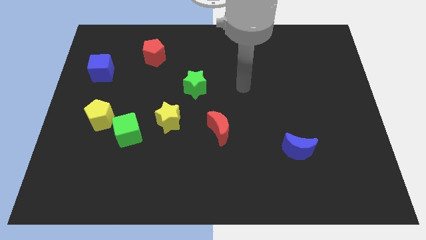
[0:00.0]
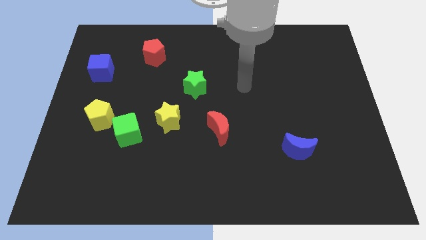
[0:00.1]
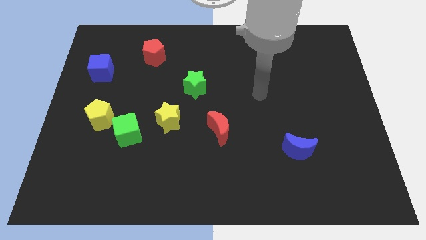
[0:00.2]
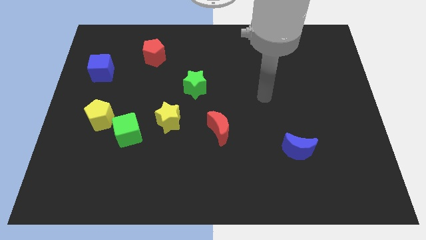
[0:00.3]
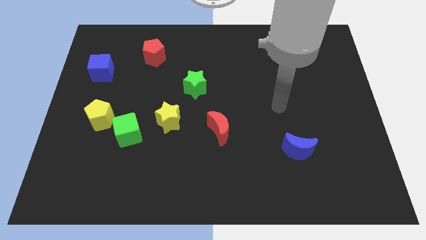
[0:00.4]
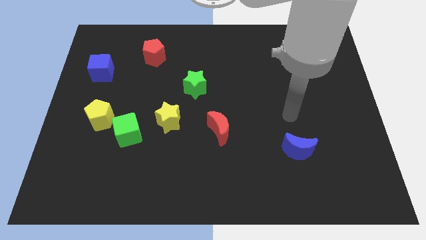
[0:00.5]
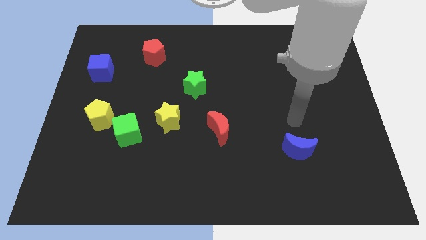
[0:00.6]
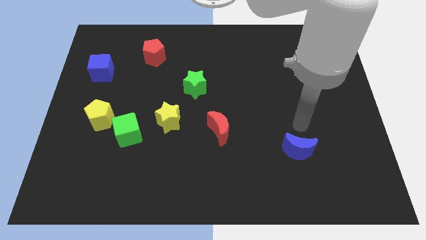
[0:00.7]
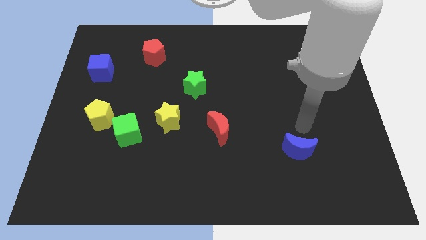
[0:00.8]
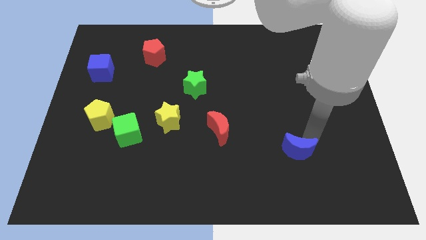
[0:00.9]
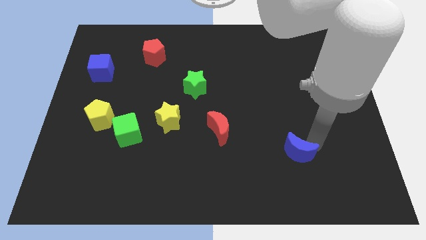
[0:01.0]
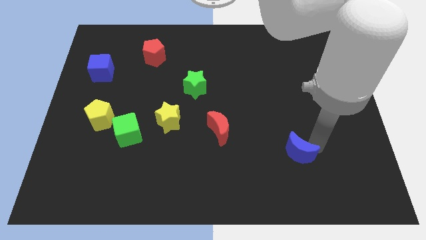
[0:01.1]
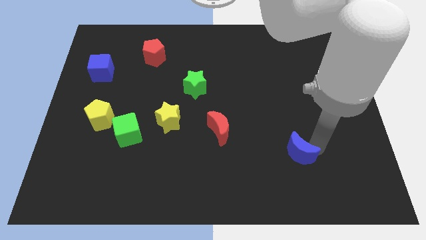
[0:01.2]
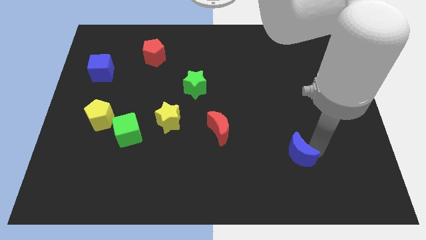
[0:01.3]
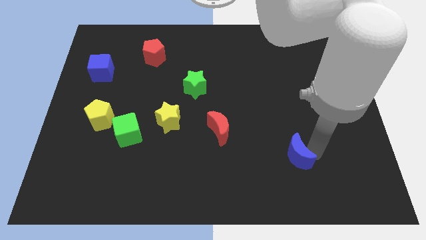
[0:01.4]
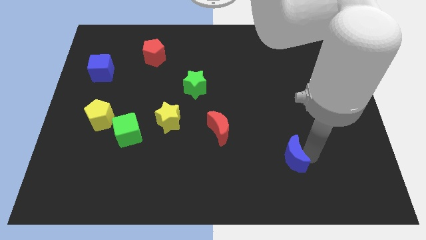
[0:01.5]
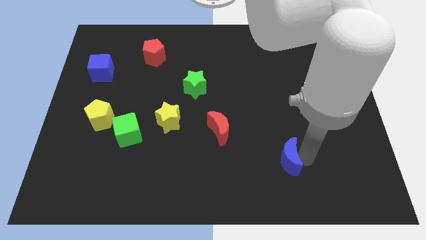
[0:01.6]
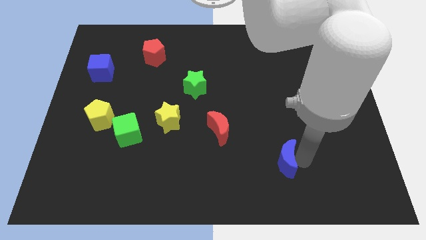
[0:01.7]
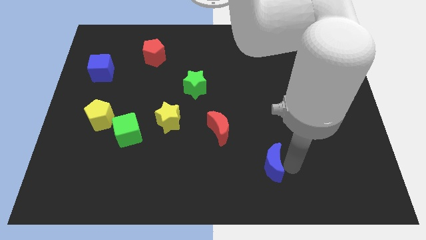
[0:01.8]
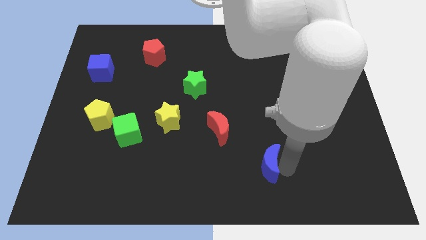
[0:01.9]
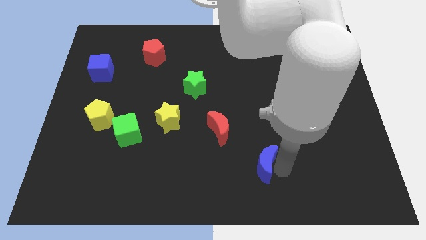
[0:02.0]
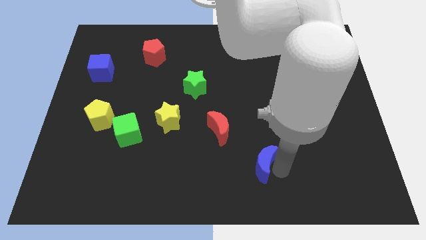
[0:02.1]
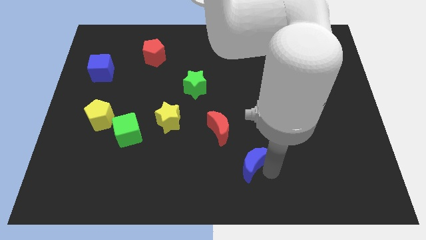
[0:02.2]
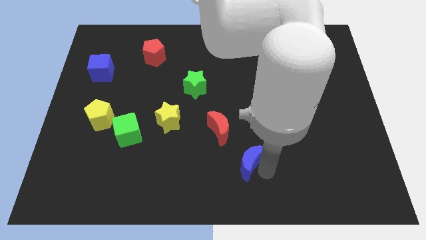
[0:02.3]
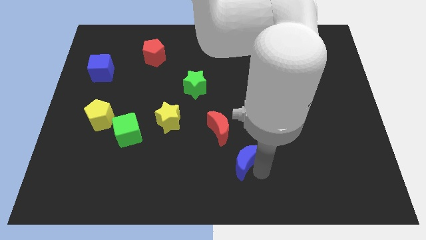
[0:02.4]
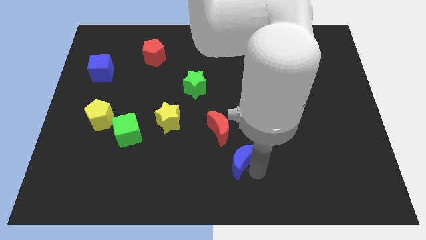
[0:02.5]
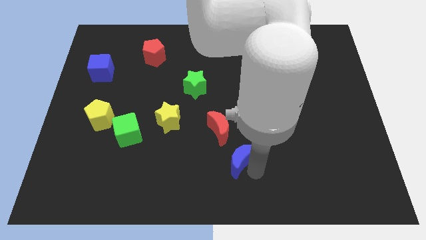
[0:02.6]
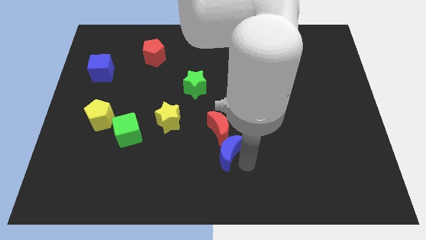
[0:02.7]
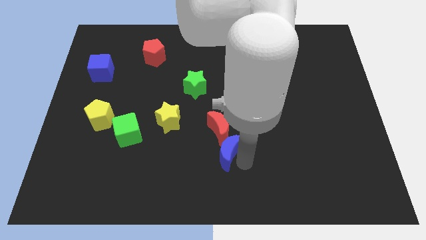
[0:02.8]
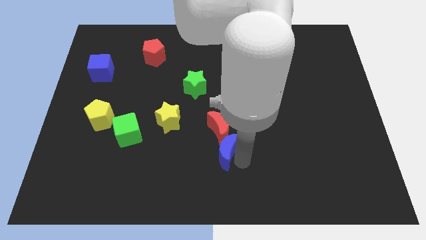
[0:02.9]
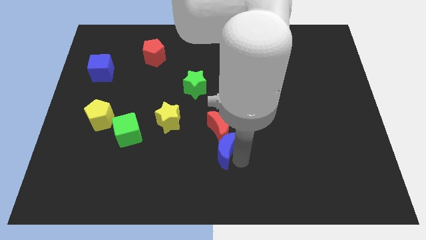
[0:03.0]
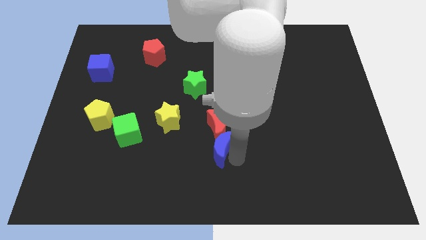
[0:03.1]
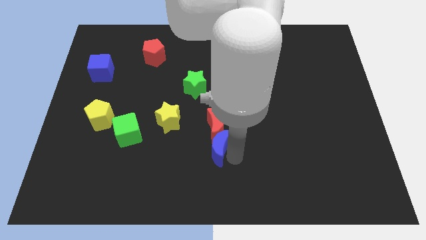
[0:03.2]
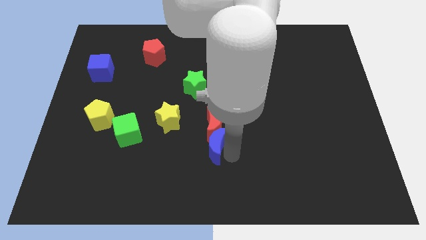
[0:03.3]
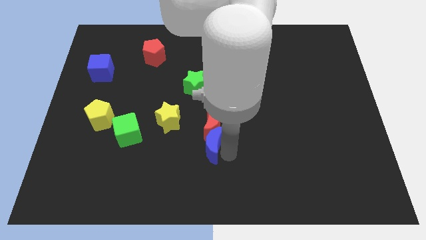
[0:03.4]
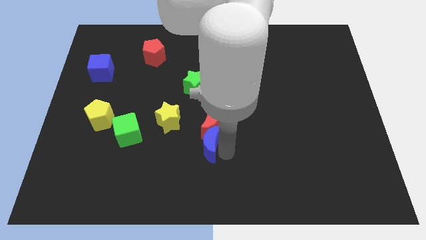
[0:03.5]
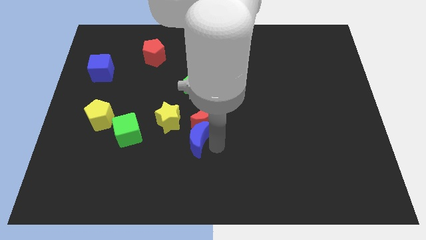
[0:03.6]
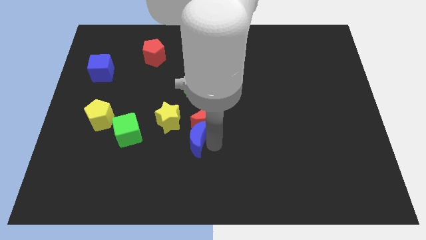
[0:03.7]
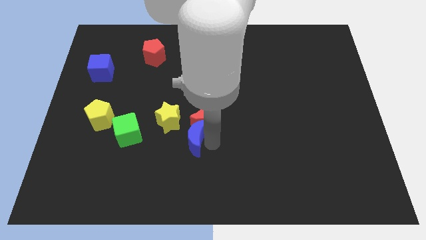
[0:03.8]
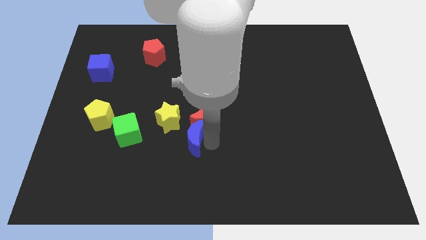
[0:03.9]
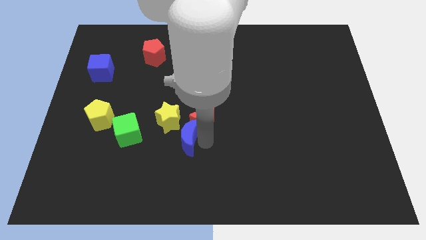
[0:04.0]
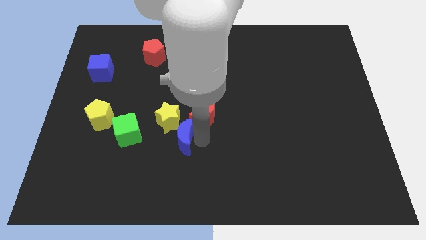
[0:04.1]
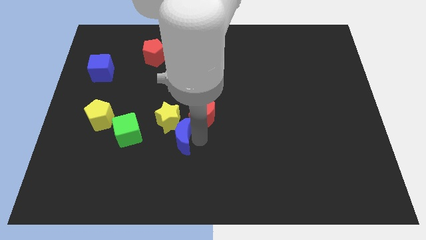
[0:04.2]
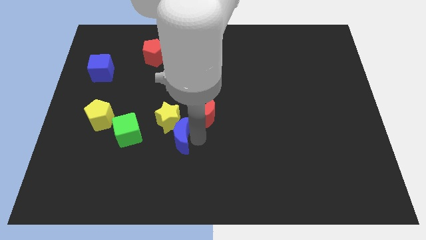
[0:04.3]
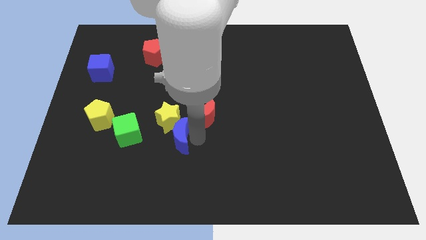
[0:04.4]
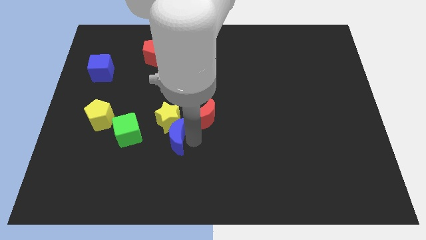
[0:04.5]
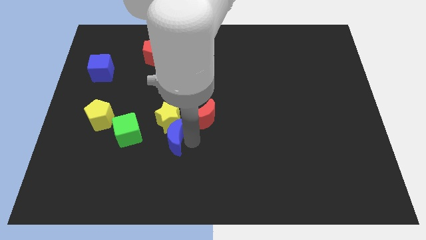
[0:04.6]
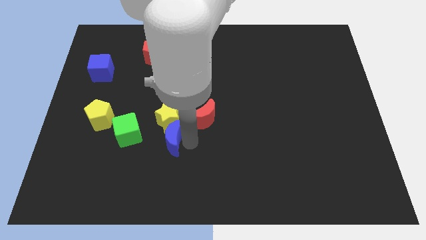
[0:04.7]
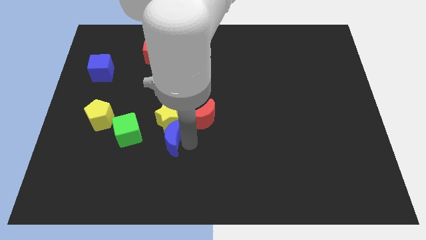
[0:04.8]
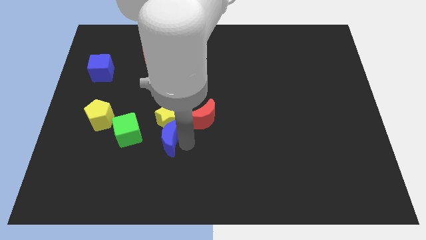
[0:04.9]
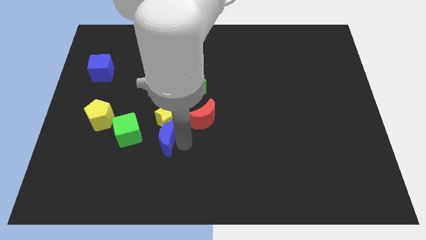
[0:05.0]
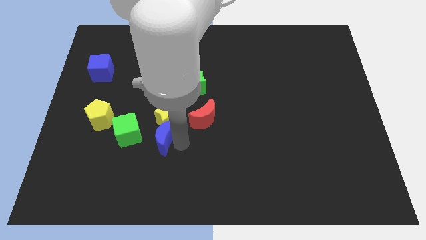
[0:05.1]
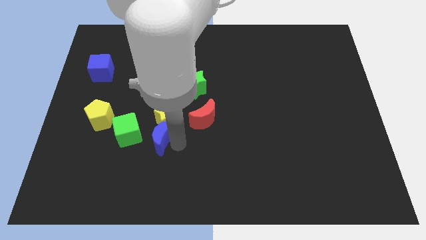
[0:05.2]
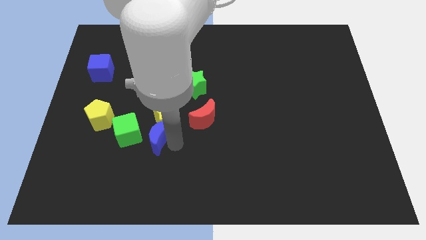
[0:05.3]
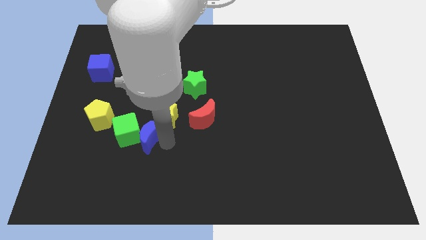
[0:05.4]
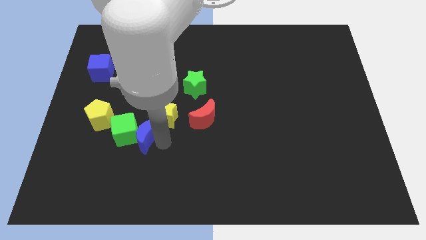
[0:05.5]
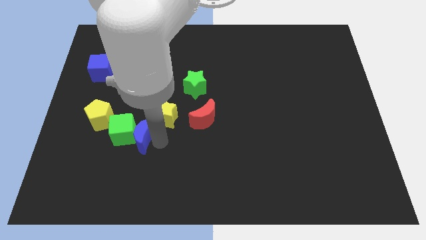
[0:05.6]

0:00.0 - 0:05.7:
put the blue moon towards the green cube

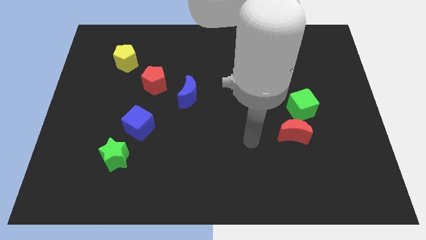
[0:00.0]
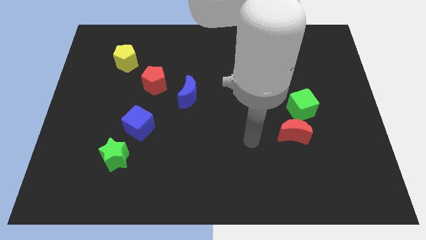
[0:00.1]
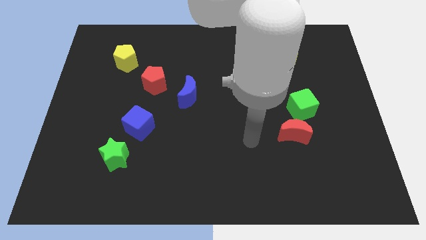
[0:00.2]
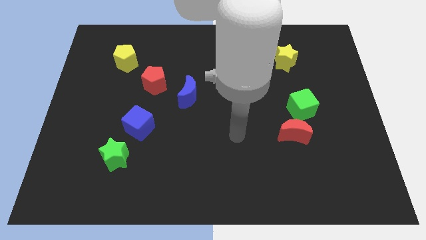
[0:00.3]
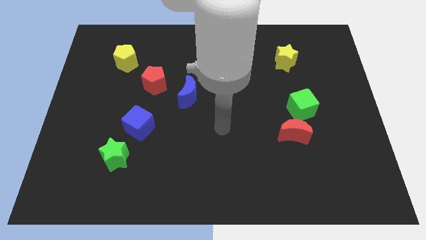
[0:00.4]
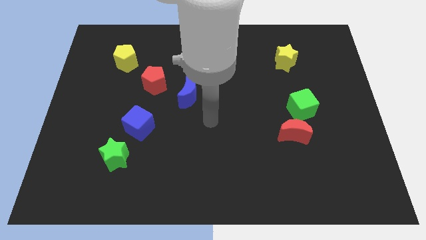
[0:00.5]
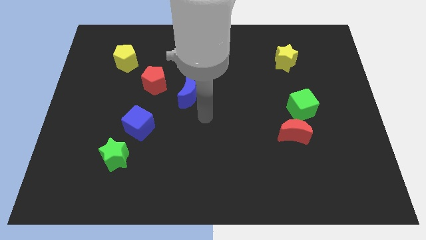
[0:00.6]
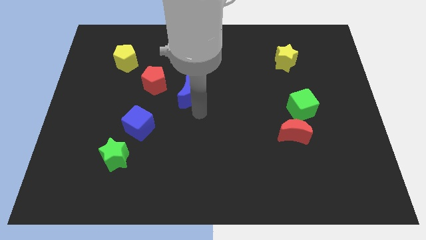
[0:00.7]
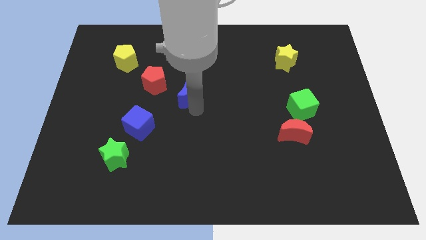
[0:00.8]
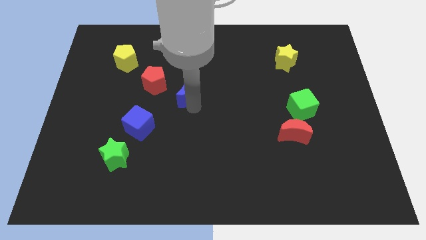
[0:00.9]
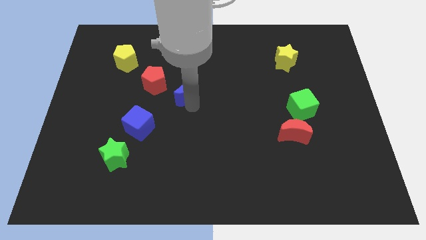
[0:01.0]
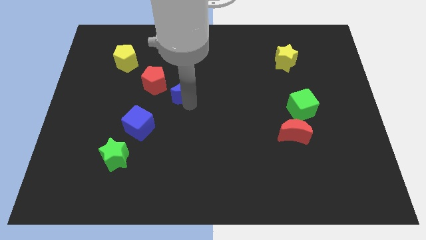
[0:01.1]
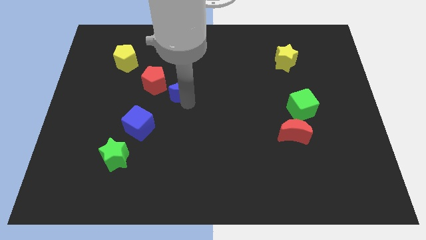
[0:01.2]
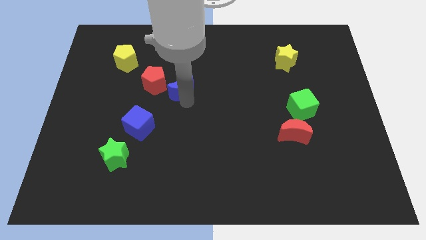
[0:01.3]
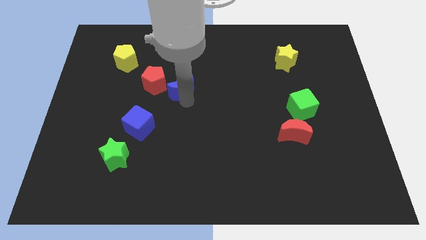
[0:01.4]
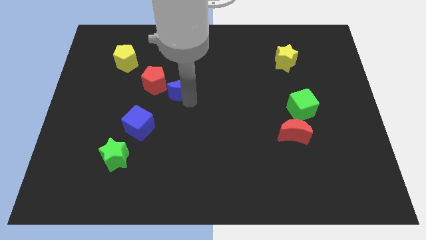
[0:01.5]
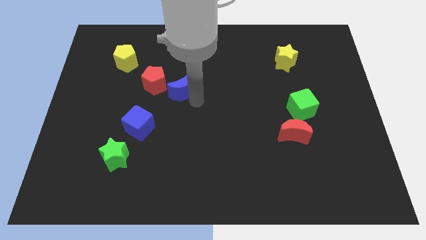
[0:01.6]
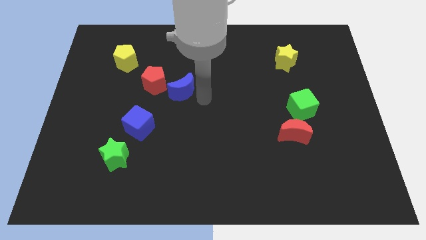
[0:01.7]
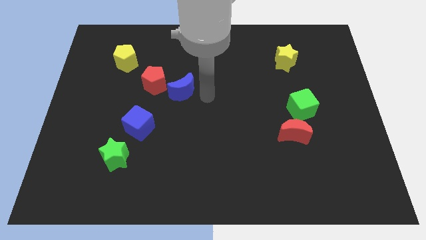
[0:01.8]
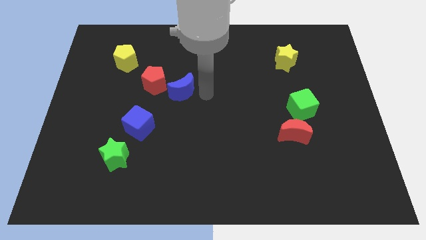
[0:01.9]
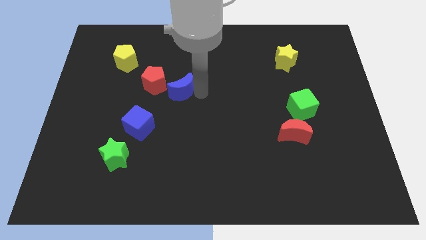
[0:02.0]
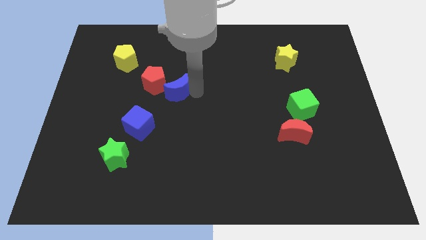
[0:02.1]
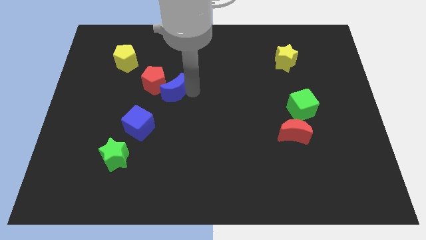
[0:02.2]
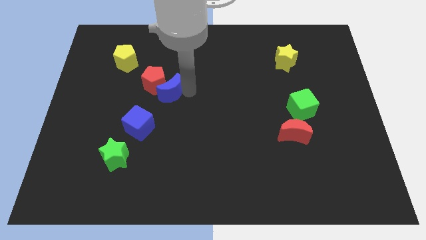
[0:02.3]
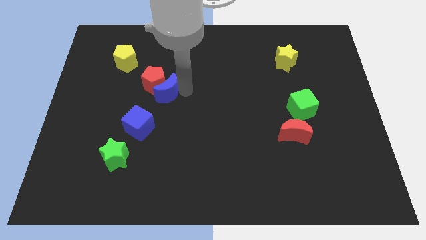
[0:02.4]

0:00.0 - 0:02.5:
push the blue moon close to the red pentagon
